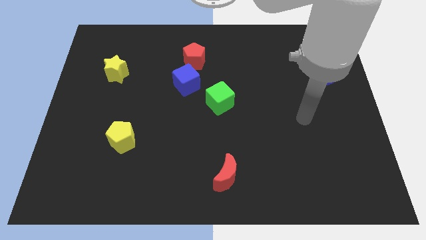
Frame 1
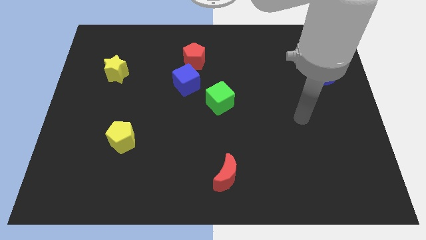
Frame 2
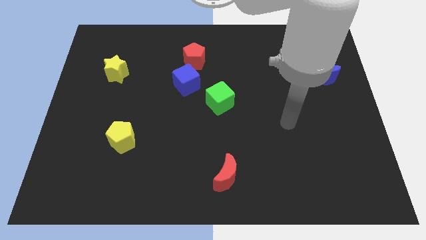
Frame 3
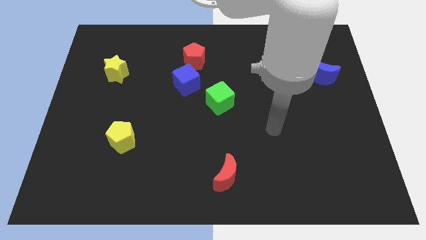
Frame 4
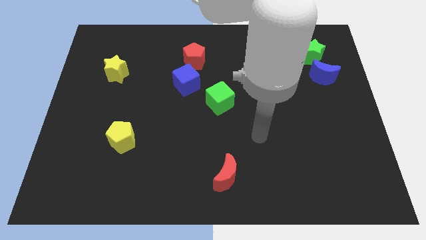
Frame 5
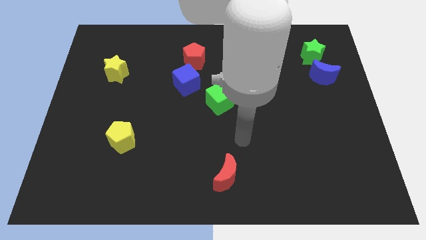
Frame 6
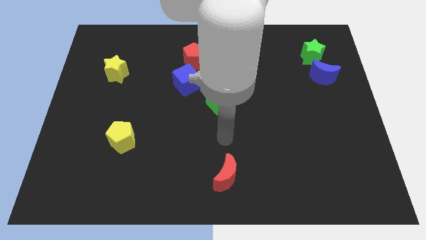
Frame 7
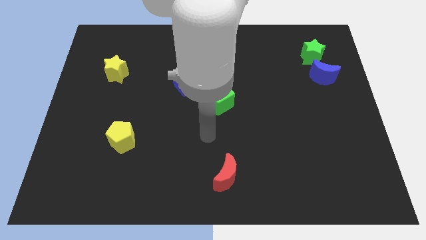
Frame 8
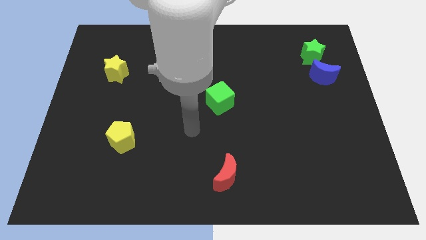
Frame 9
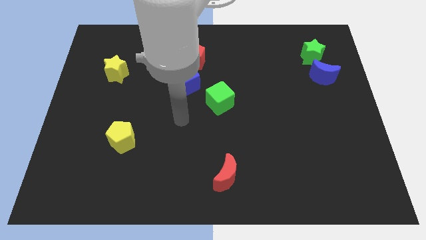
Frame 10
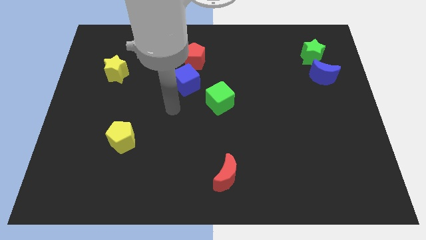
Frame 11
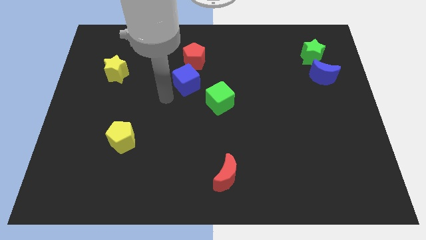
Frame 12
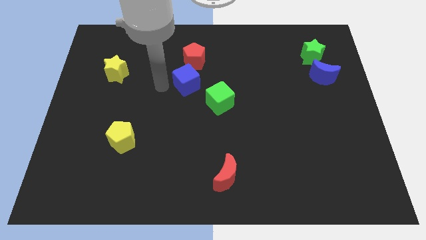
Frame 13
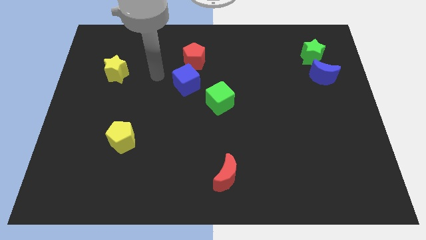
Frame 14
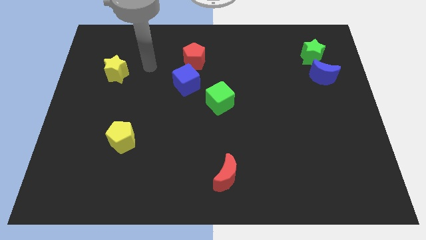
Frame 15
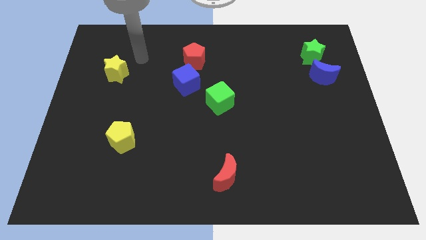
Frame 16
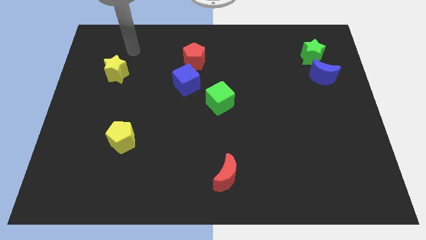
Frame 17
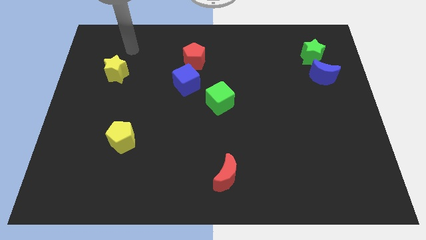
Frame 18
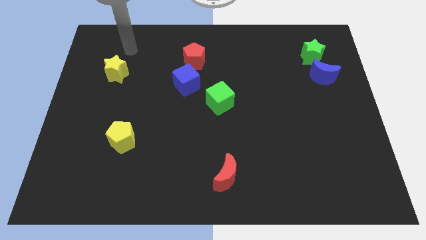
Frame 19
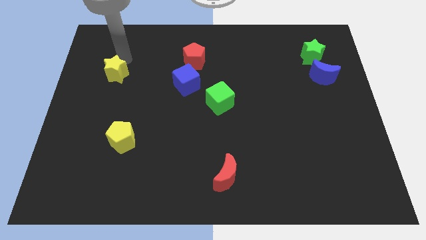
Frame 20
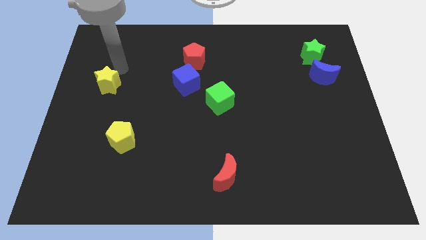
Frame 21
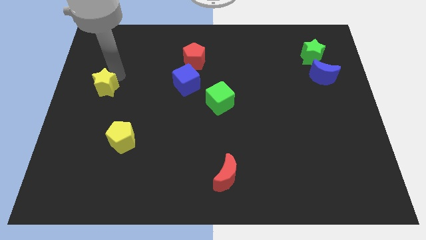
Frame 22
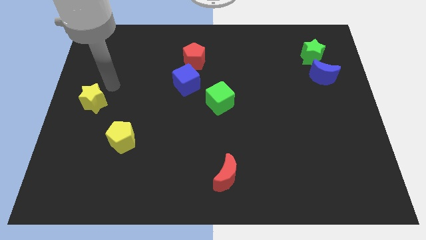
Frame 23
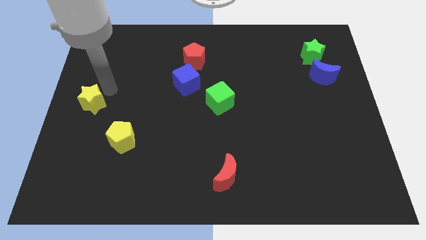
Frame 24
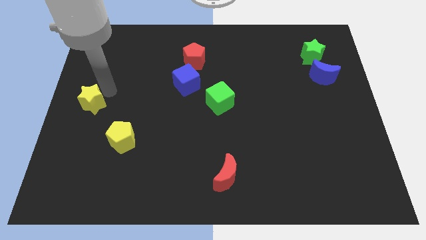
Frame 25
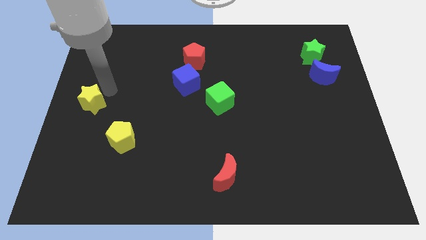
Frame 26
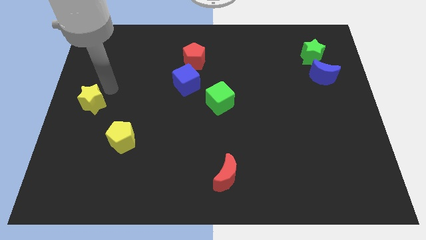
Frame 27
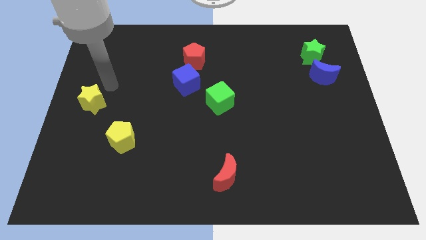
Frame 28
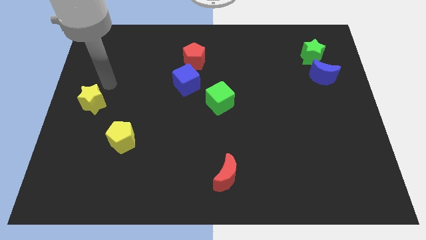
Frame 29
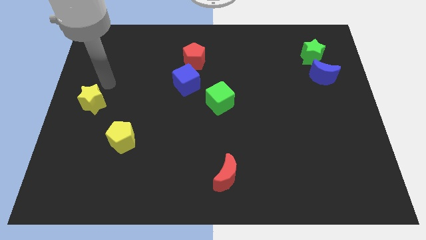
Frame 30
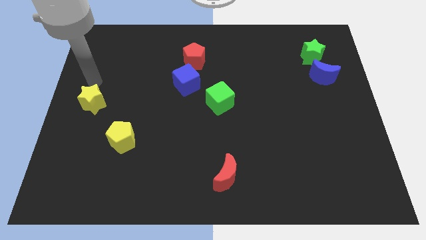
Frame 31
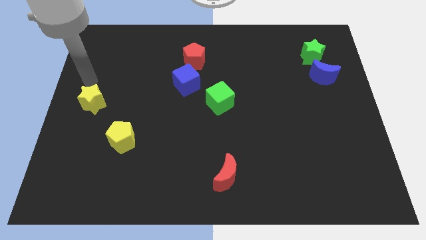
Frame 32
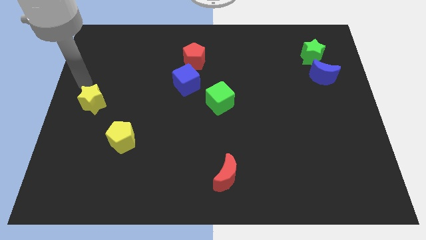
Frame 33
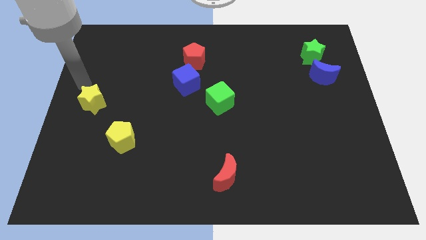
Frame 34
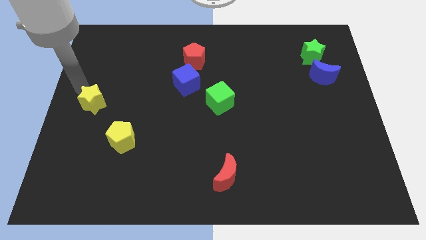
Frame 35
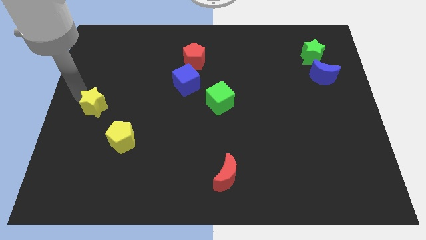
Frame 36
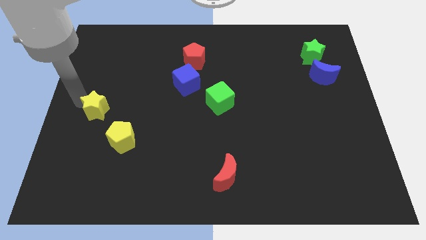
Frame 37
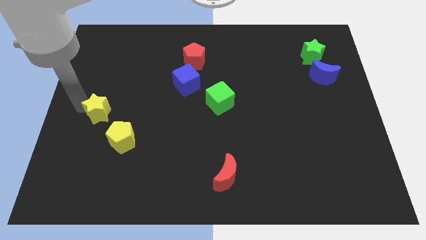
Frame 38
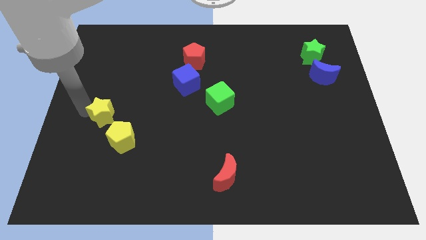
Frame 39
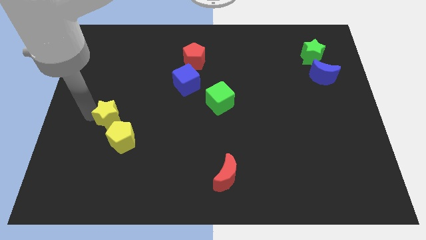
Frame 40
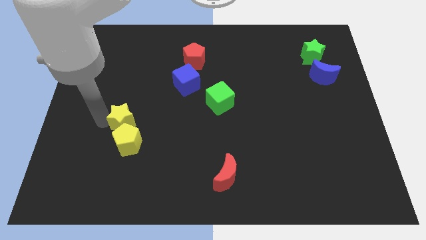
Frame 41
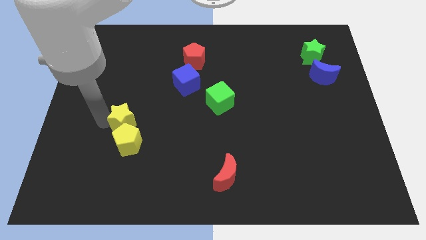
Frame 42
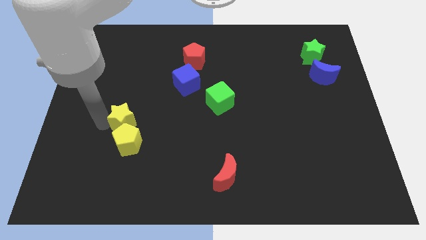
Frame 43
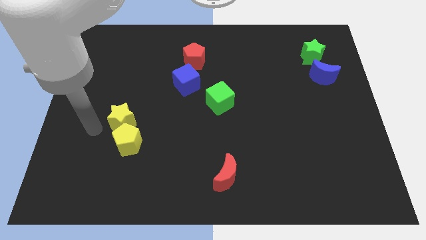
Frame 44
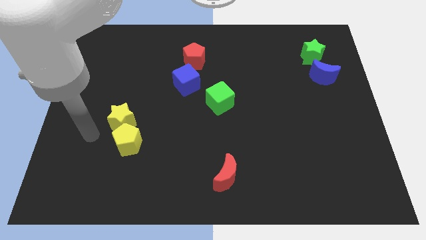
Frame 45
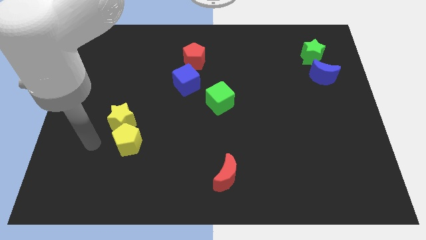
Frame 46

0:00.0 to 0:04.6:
push the yellow star to the top side of the yellow pentagon

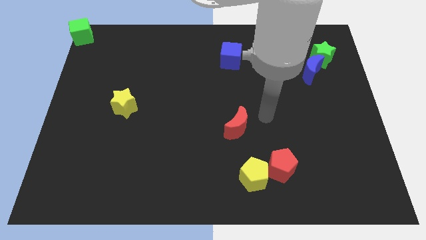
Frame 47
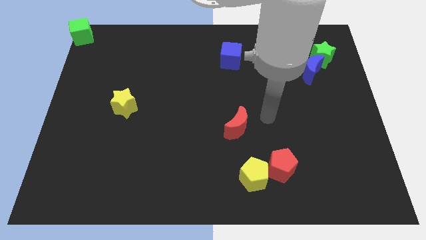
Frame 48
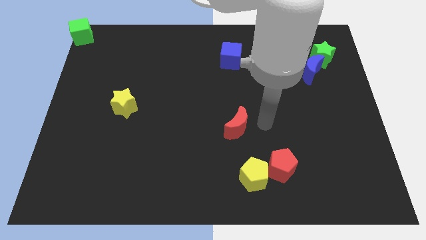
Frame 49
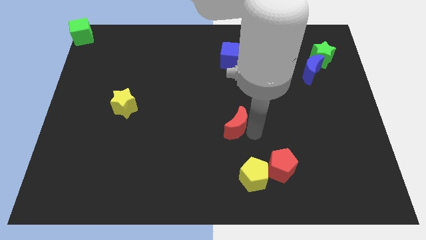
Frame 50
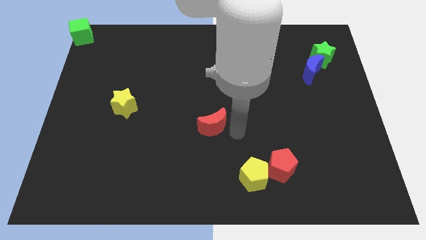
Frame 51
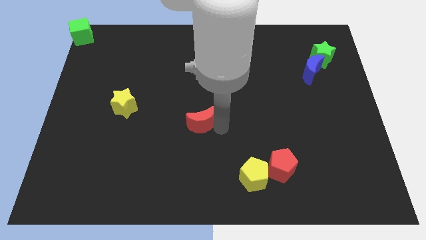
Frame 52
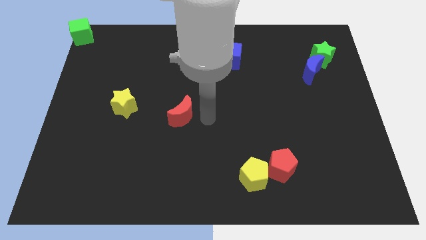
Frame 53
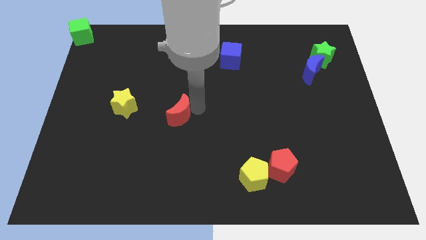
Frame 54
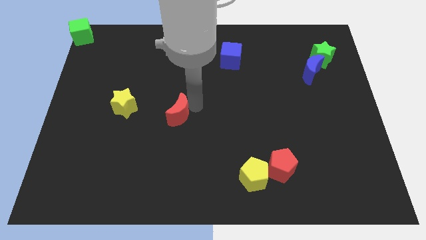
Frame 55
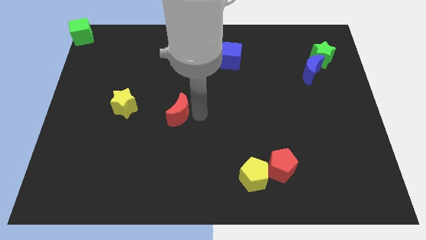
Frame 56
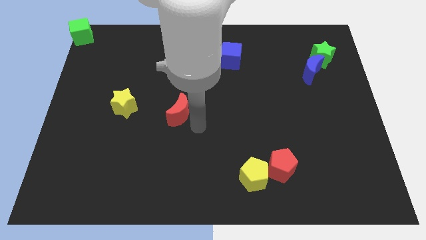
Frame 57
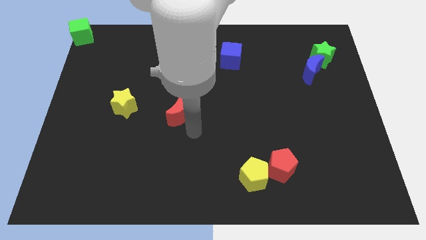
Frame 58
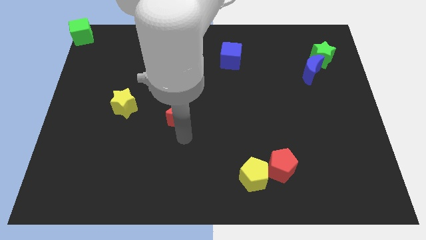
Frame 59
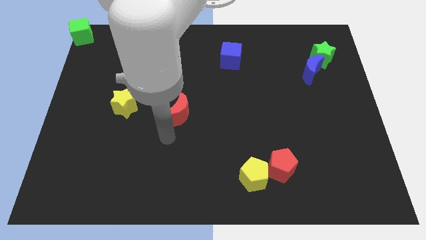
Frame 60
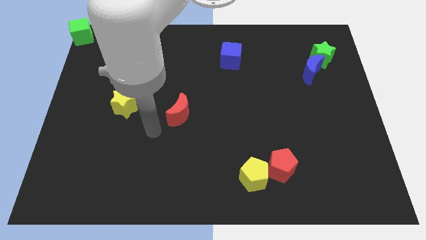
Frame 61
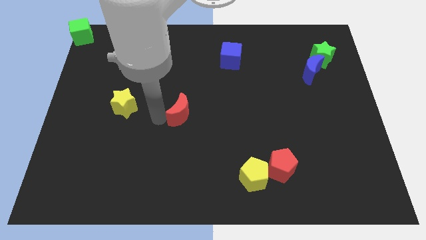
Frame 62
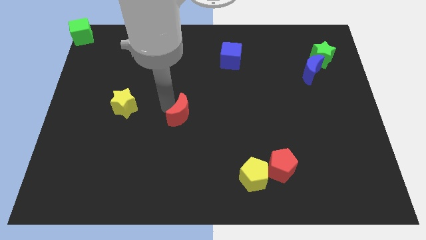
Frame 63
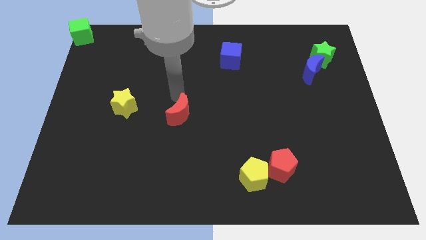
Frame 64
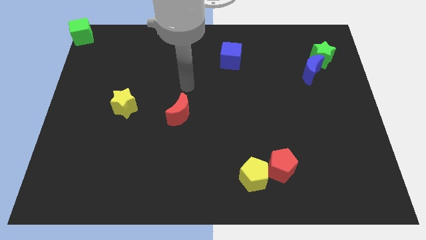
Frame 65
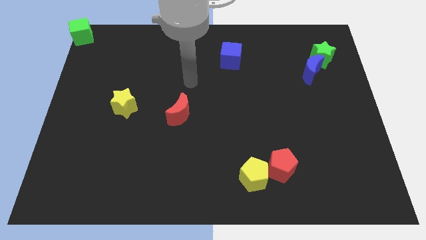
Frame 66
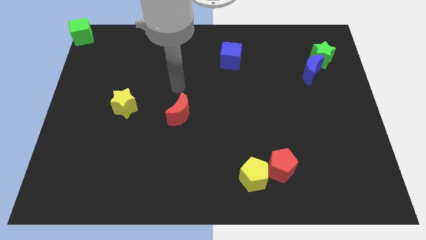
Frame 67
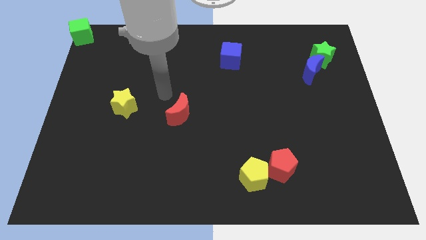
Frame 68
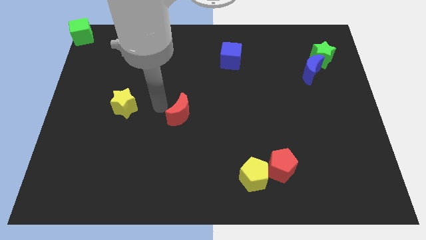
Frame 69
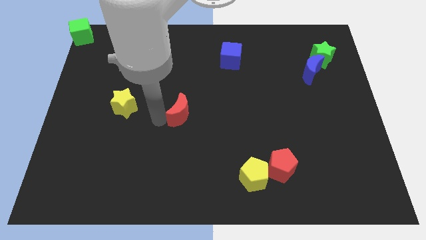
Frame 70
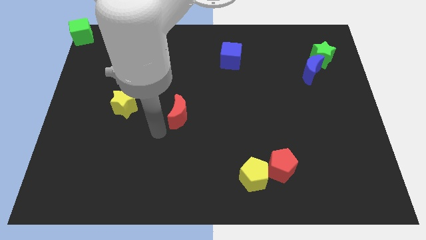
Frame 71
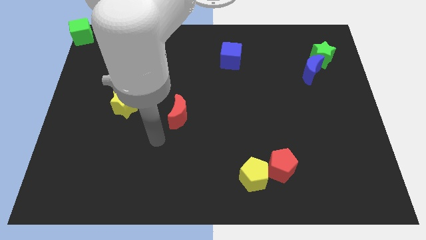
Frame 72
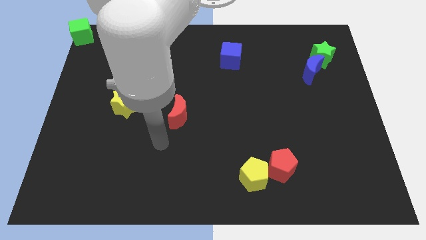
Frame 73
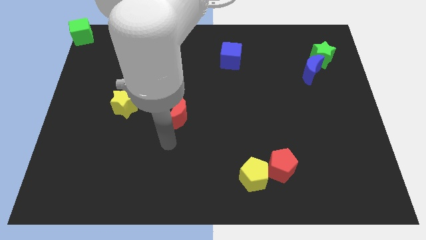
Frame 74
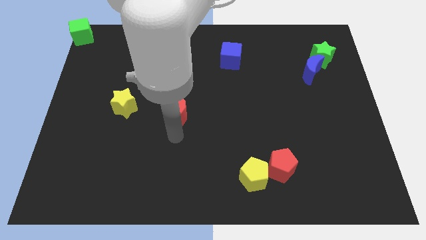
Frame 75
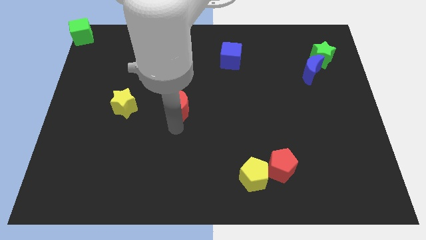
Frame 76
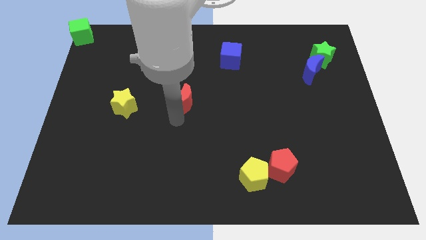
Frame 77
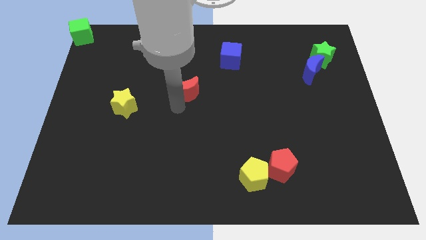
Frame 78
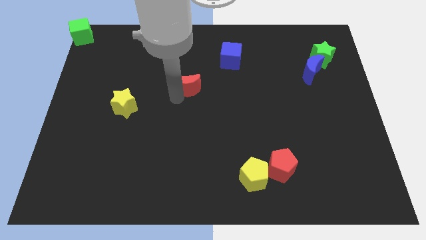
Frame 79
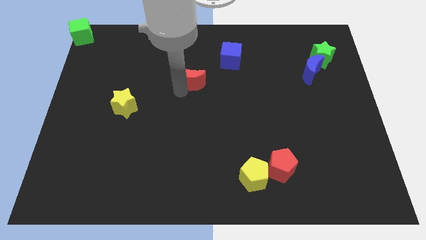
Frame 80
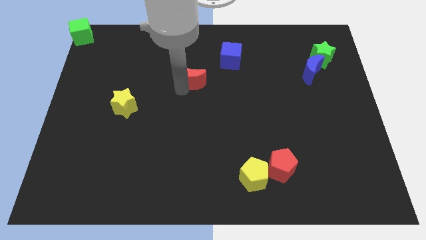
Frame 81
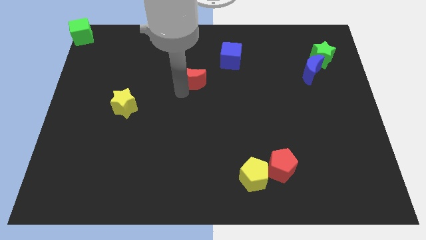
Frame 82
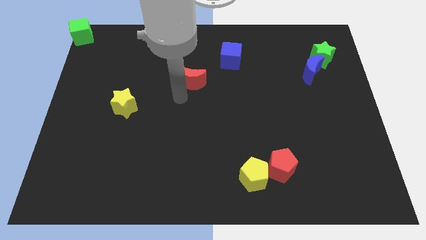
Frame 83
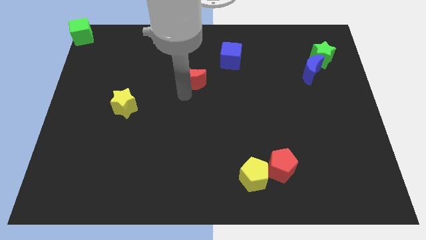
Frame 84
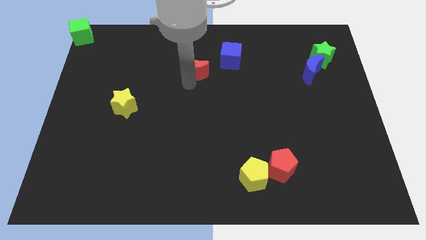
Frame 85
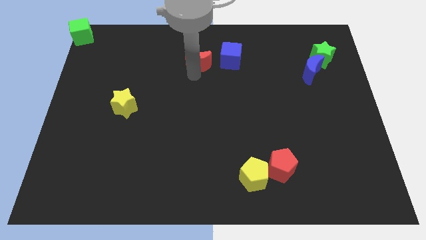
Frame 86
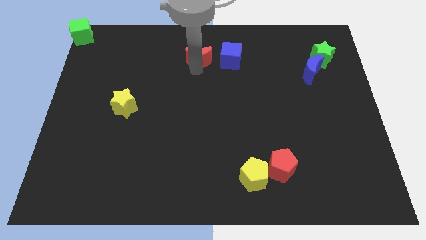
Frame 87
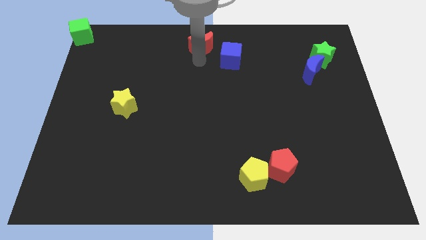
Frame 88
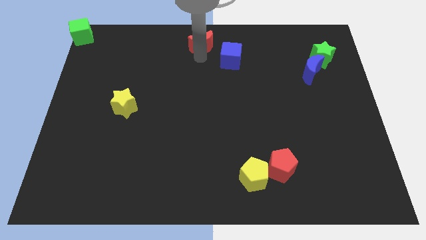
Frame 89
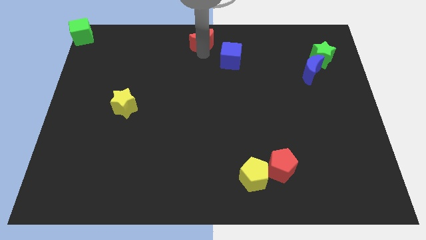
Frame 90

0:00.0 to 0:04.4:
move the red moon to the top middle
